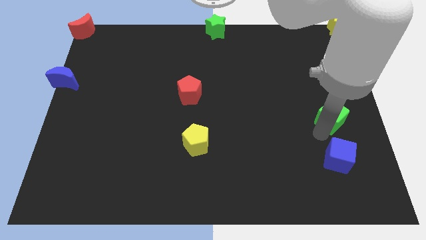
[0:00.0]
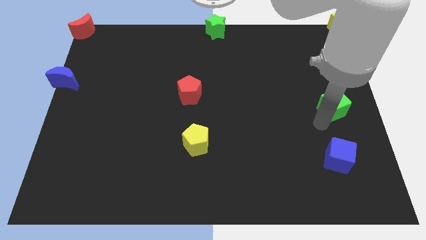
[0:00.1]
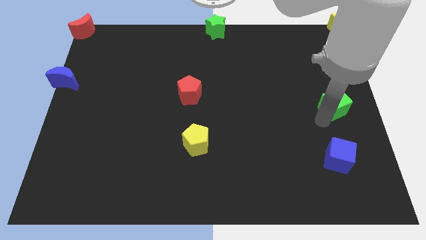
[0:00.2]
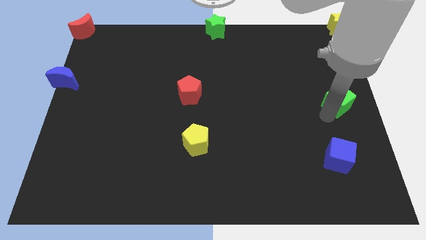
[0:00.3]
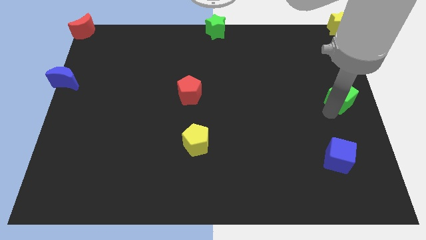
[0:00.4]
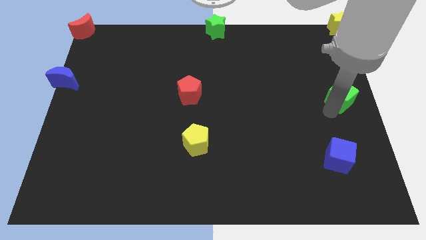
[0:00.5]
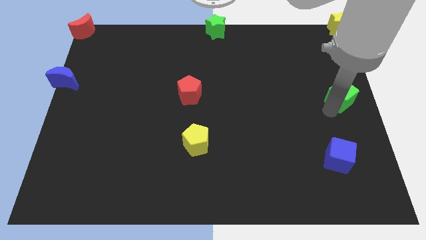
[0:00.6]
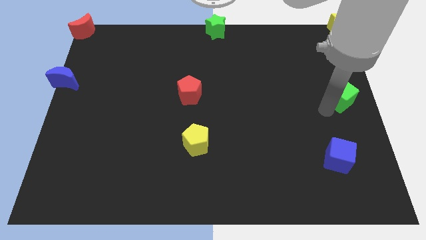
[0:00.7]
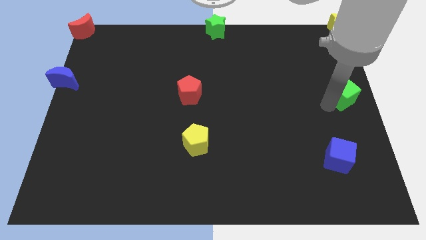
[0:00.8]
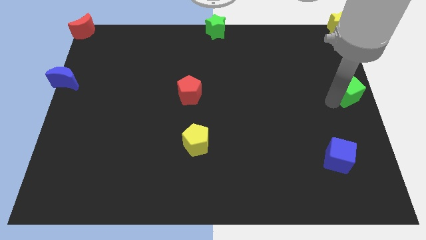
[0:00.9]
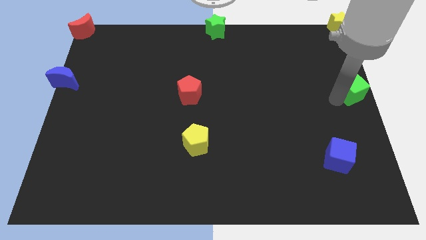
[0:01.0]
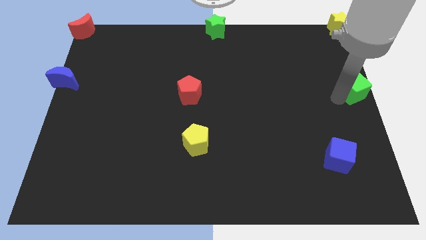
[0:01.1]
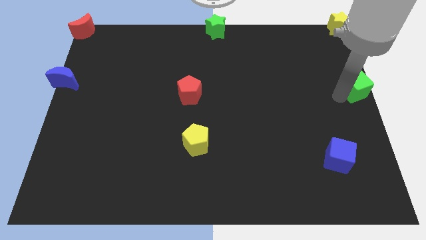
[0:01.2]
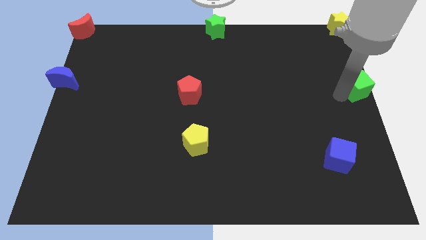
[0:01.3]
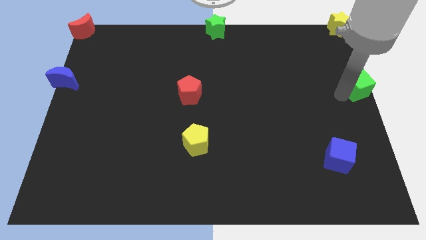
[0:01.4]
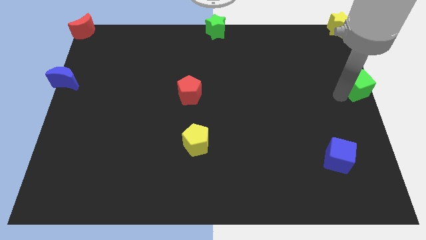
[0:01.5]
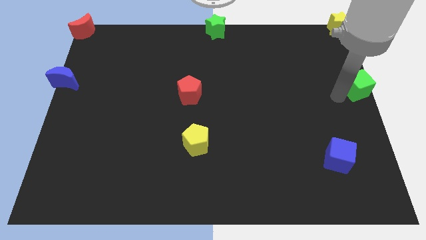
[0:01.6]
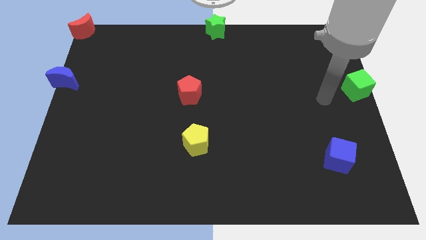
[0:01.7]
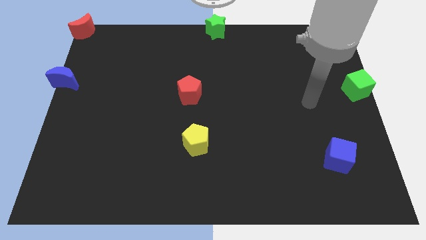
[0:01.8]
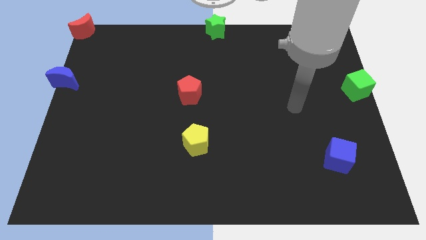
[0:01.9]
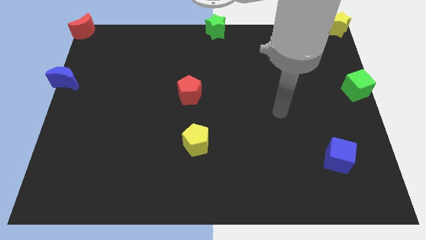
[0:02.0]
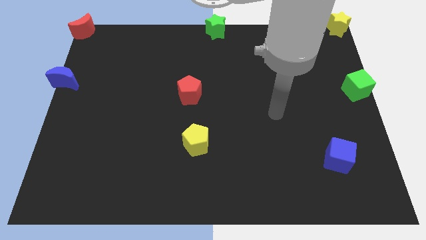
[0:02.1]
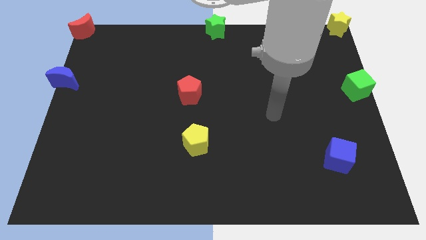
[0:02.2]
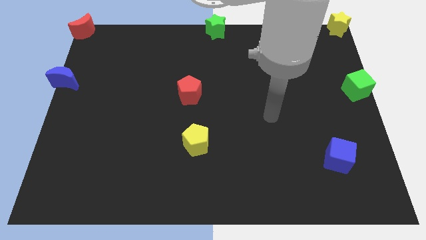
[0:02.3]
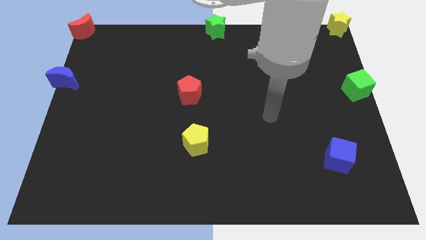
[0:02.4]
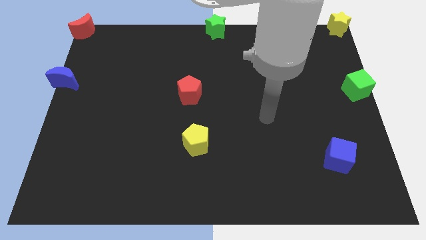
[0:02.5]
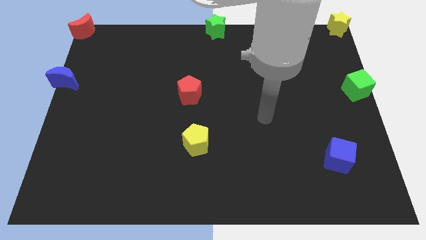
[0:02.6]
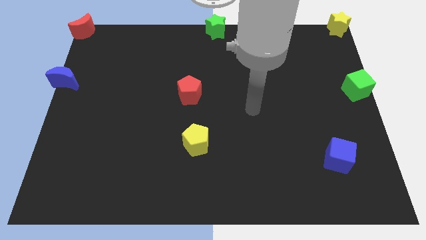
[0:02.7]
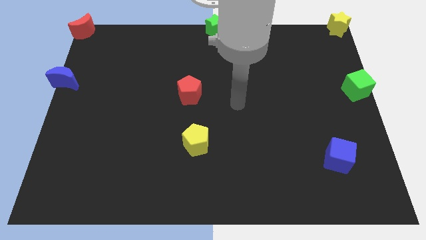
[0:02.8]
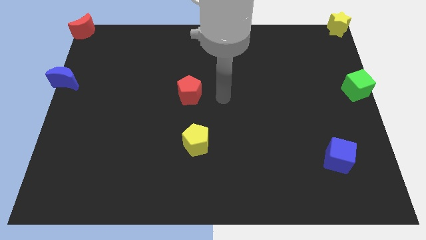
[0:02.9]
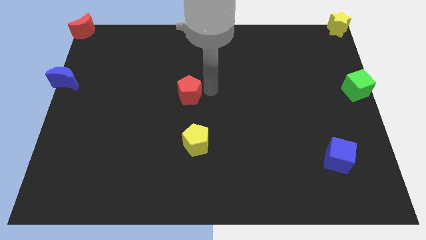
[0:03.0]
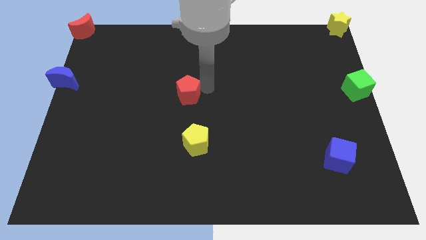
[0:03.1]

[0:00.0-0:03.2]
move the green cube to the right center of the board

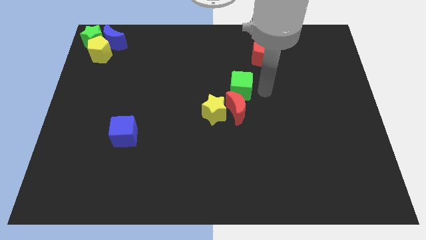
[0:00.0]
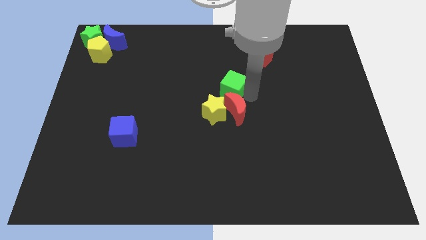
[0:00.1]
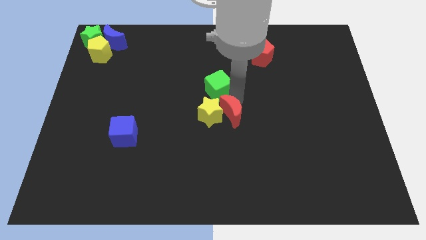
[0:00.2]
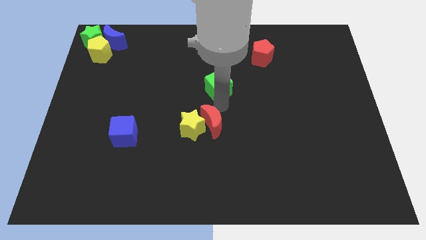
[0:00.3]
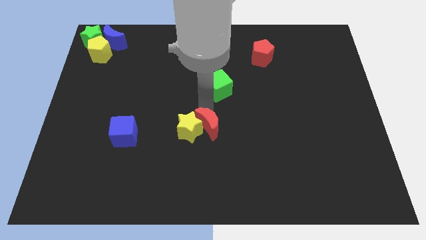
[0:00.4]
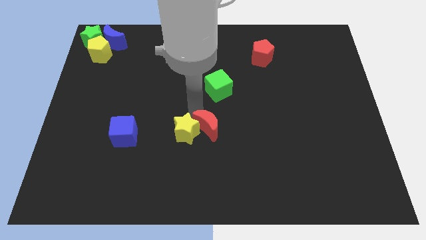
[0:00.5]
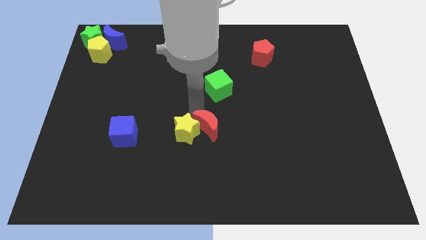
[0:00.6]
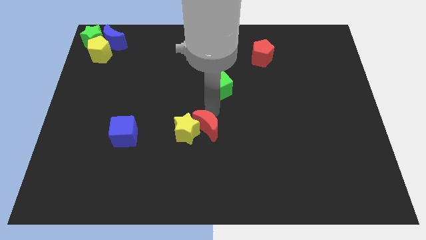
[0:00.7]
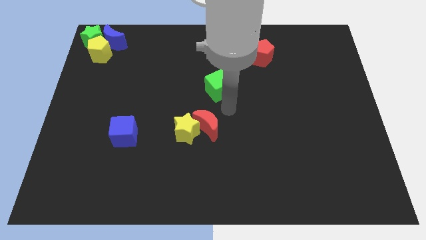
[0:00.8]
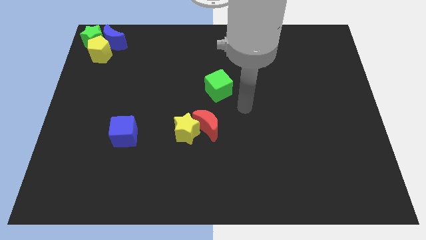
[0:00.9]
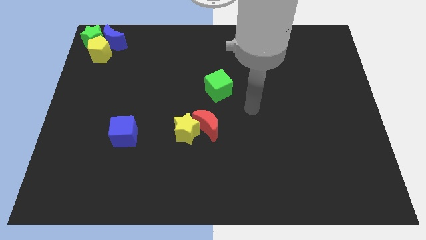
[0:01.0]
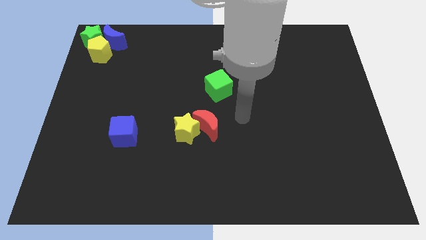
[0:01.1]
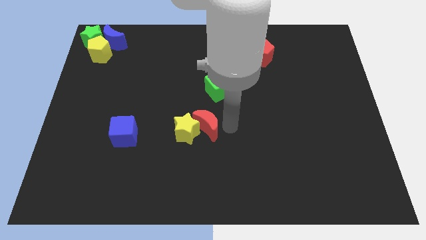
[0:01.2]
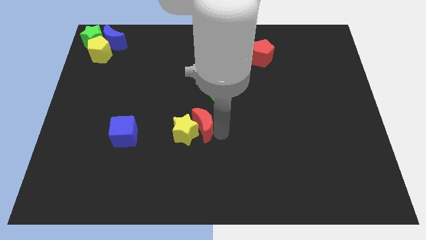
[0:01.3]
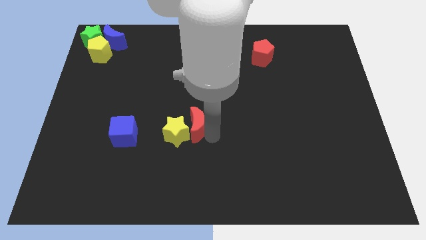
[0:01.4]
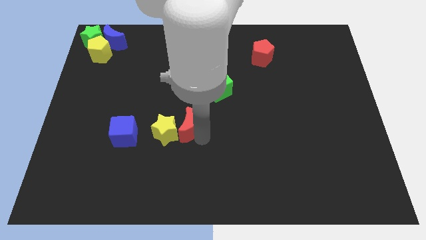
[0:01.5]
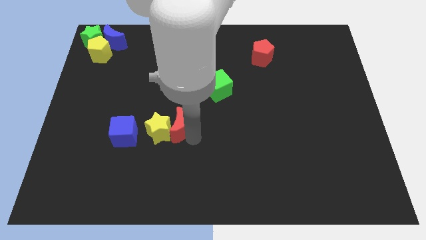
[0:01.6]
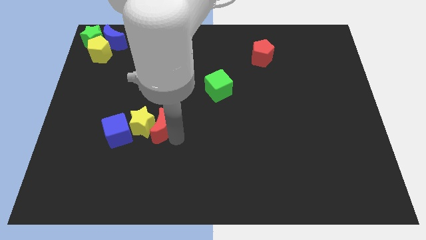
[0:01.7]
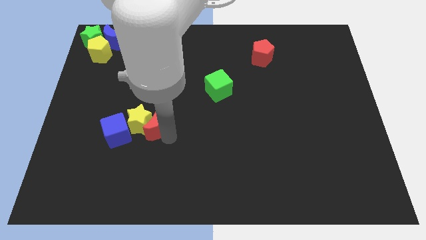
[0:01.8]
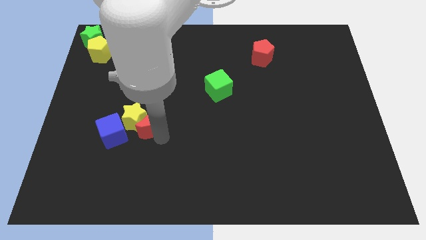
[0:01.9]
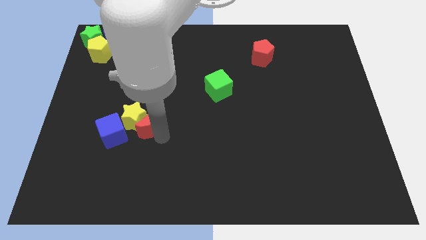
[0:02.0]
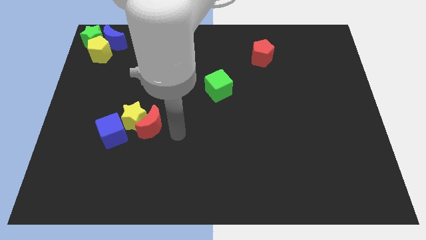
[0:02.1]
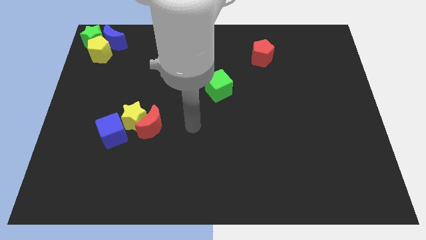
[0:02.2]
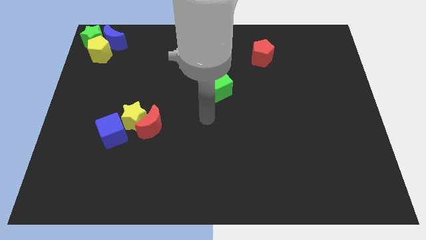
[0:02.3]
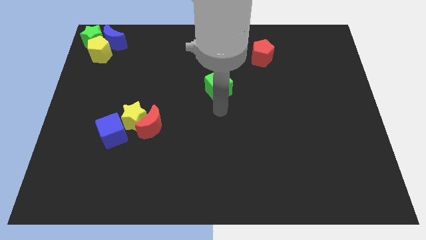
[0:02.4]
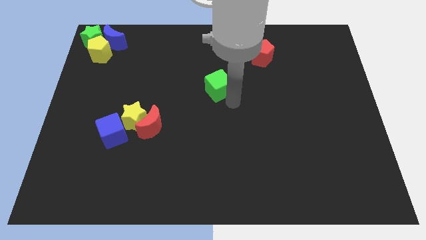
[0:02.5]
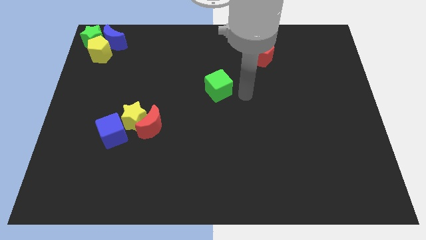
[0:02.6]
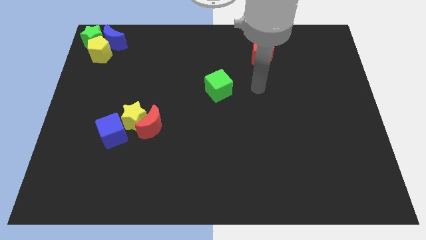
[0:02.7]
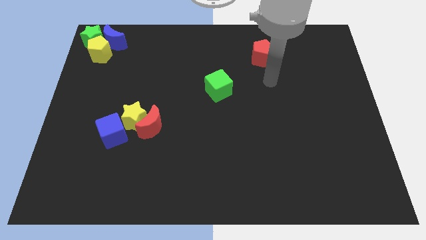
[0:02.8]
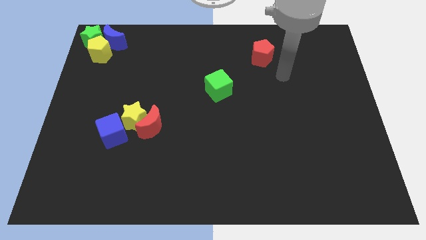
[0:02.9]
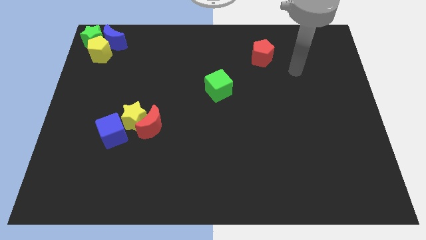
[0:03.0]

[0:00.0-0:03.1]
separate yellow star and red moon from green cube

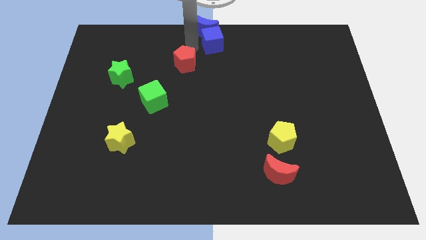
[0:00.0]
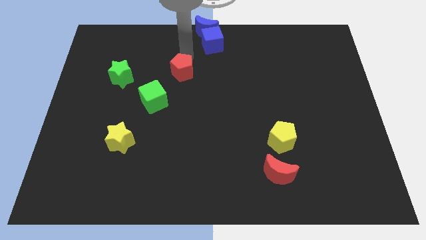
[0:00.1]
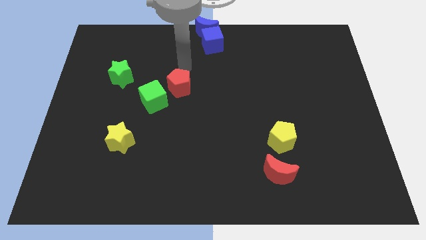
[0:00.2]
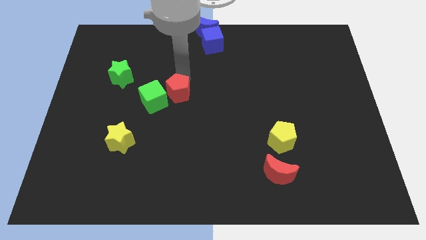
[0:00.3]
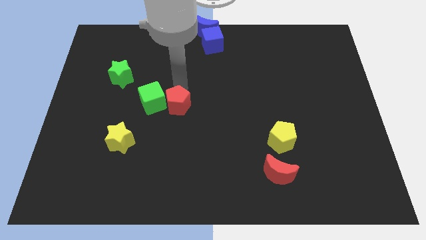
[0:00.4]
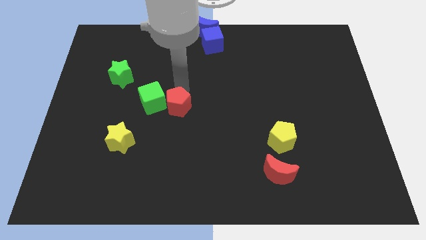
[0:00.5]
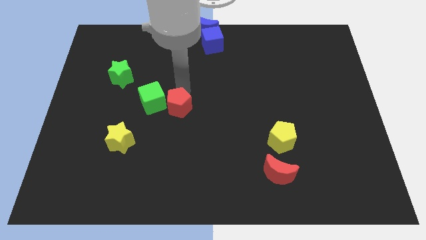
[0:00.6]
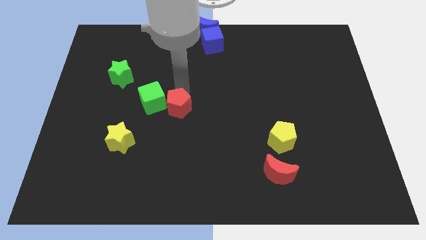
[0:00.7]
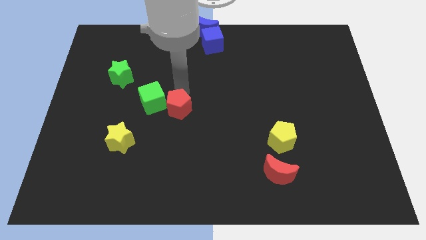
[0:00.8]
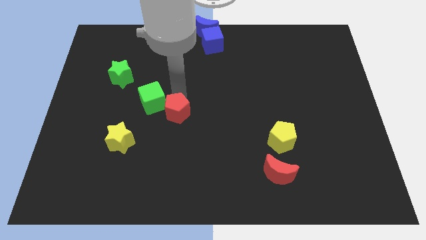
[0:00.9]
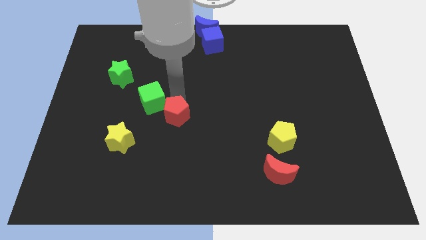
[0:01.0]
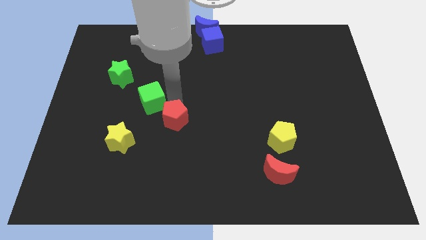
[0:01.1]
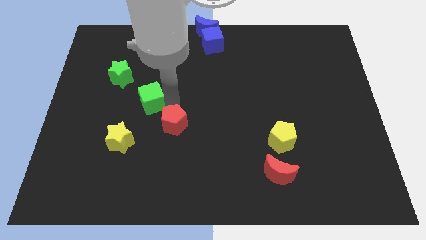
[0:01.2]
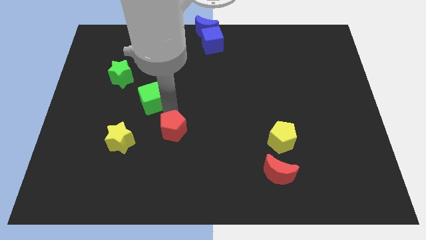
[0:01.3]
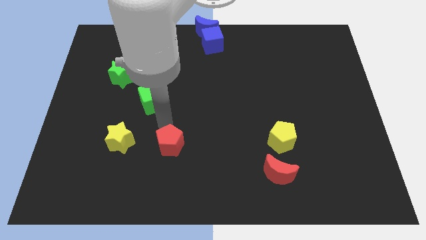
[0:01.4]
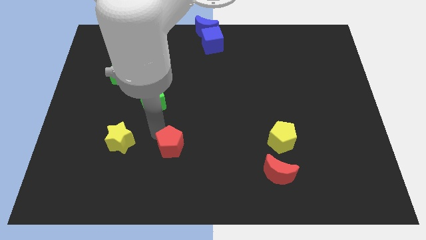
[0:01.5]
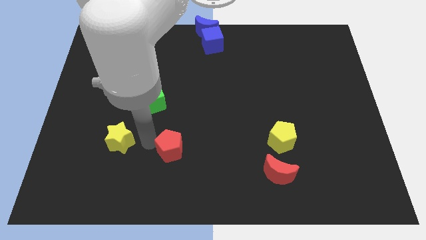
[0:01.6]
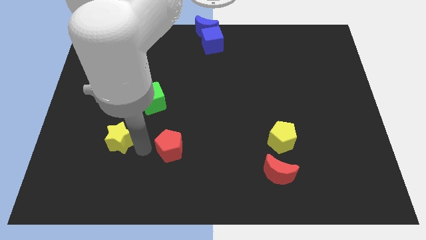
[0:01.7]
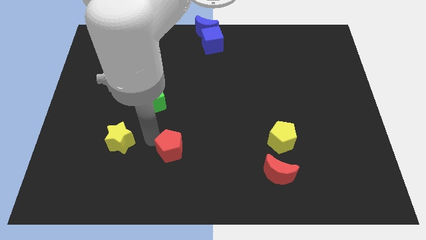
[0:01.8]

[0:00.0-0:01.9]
move red pentagon towards bottom center

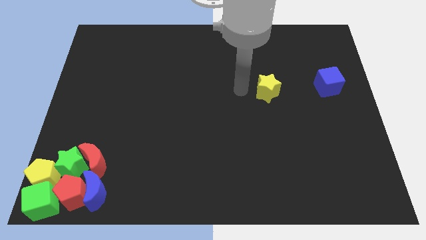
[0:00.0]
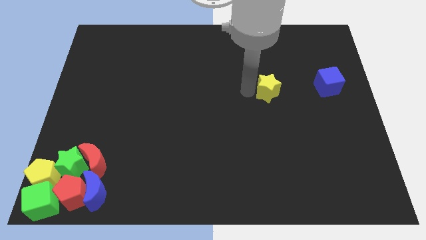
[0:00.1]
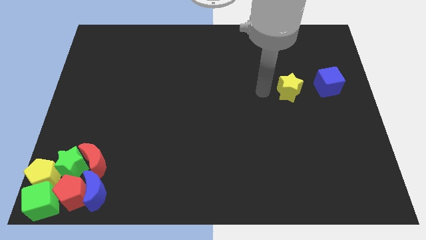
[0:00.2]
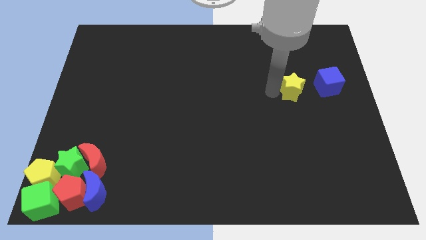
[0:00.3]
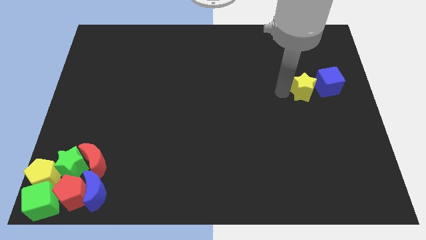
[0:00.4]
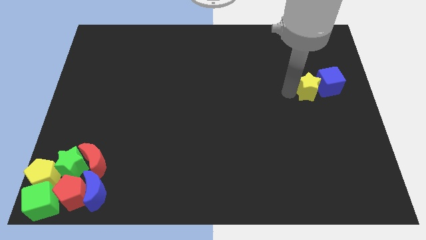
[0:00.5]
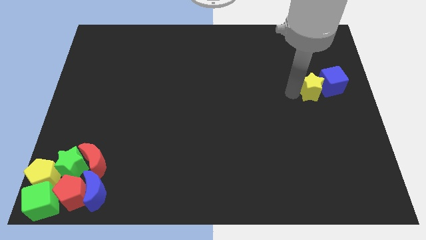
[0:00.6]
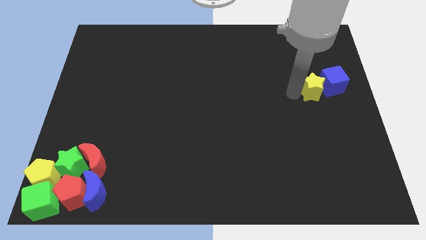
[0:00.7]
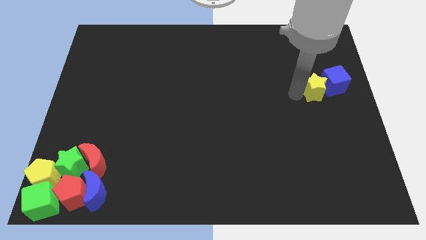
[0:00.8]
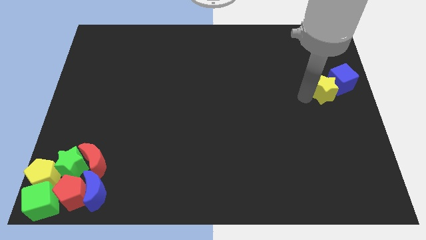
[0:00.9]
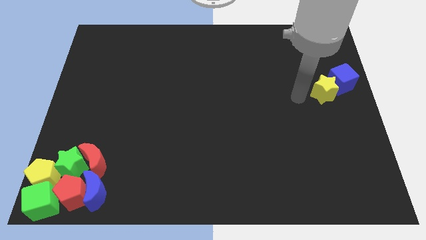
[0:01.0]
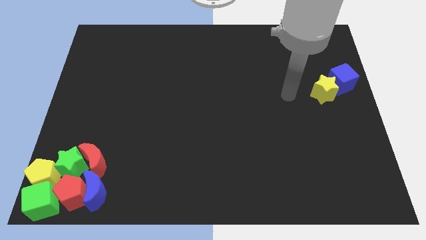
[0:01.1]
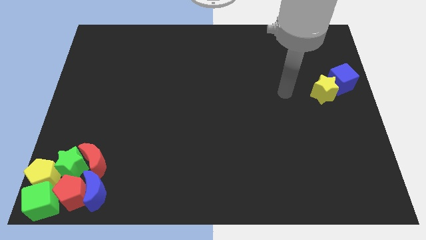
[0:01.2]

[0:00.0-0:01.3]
push yellow star into blue cube
